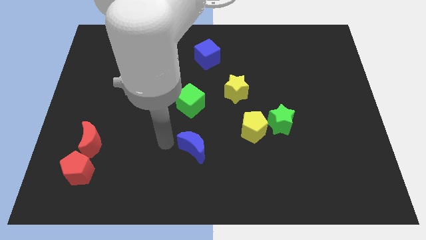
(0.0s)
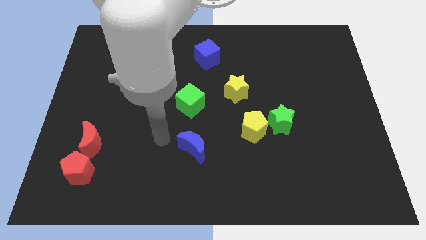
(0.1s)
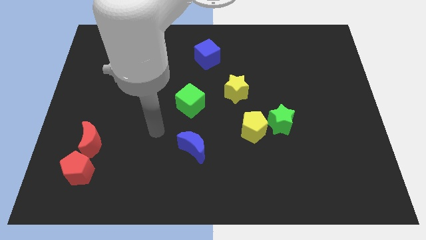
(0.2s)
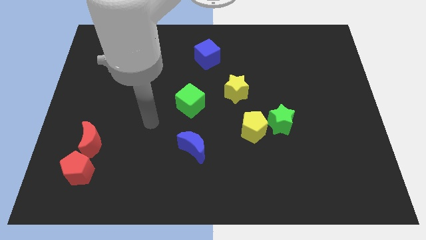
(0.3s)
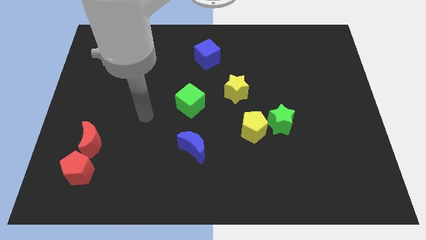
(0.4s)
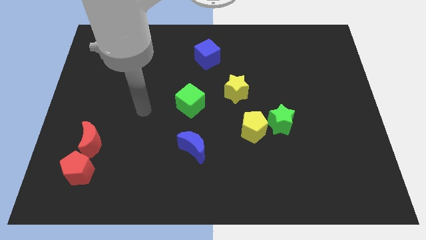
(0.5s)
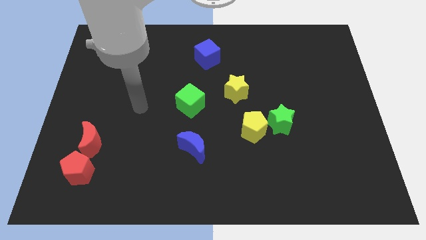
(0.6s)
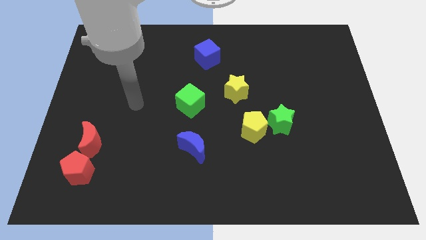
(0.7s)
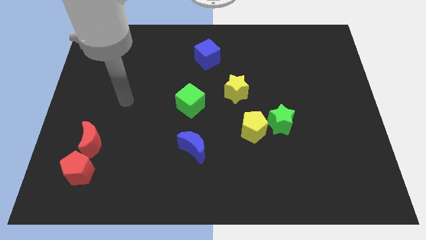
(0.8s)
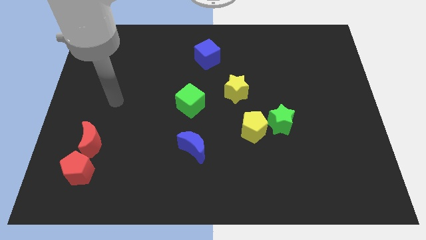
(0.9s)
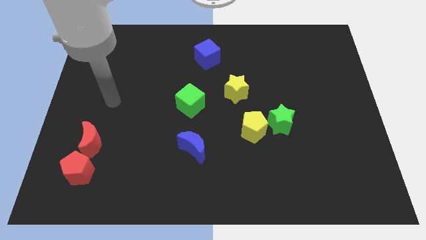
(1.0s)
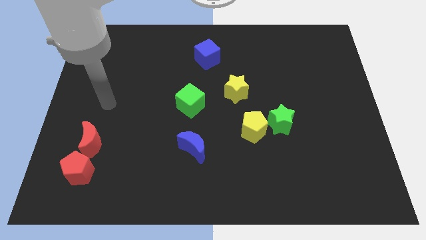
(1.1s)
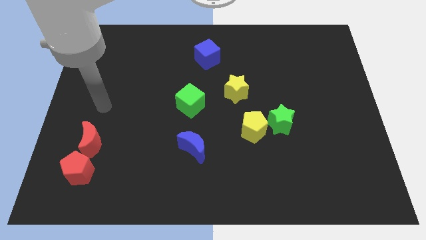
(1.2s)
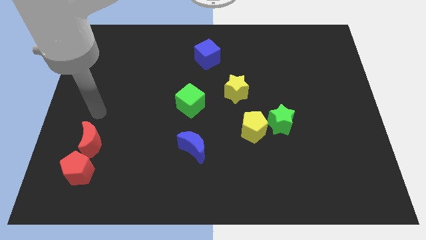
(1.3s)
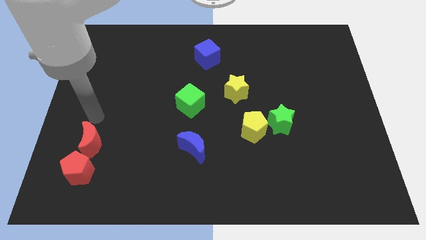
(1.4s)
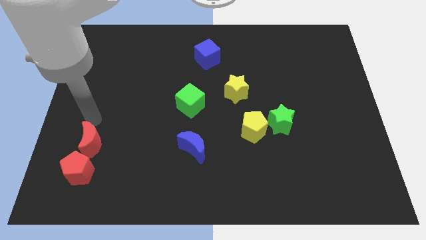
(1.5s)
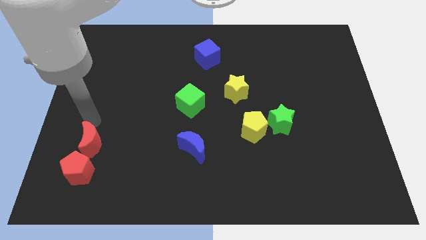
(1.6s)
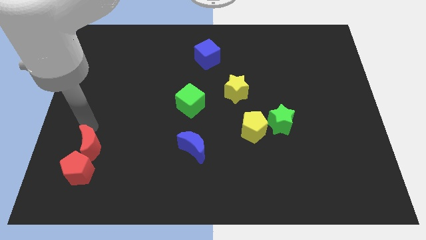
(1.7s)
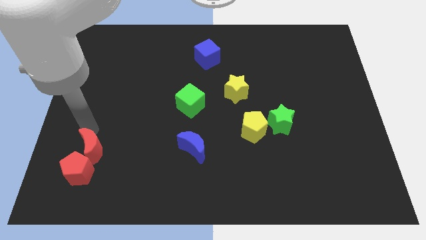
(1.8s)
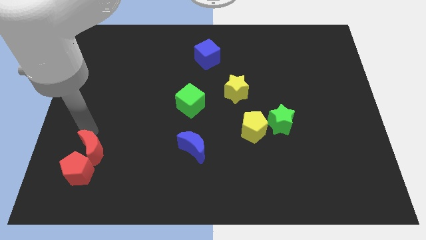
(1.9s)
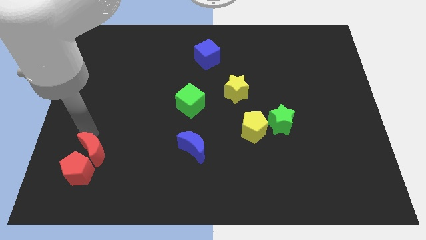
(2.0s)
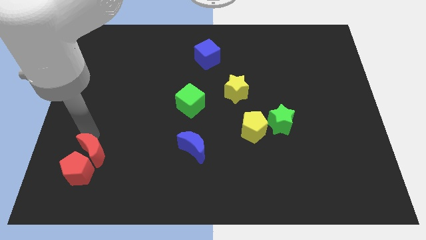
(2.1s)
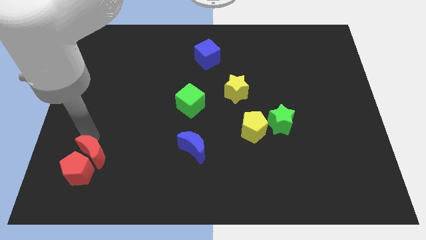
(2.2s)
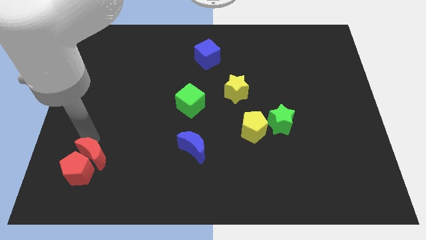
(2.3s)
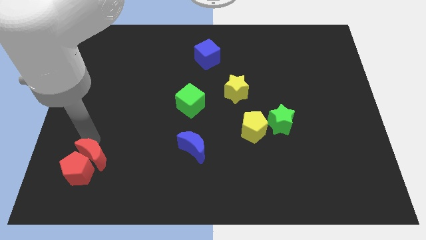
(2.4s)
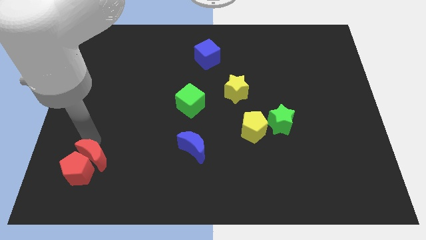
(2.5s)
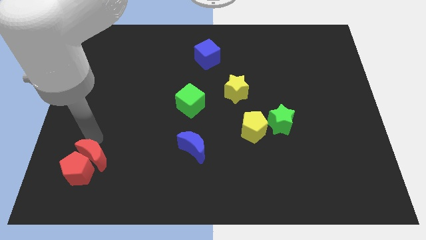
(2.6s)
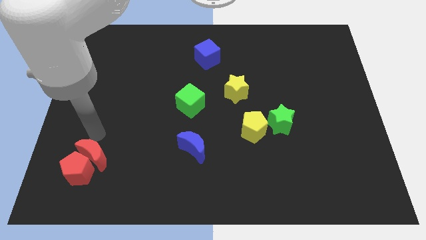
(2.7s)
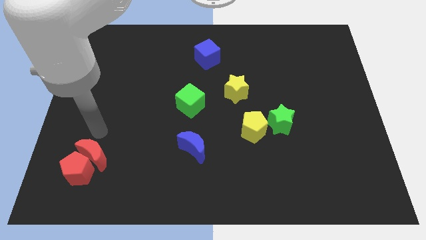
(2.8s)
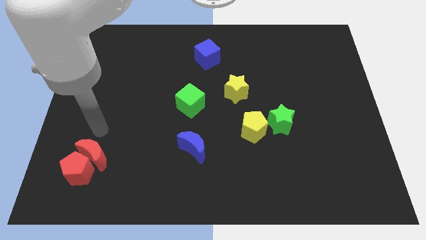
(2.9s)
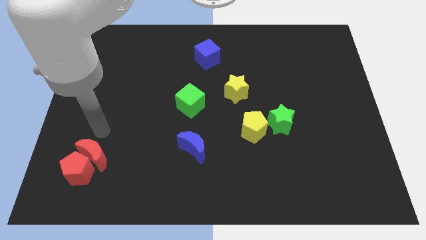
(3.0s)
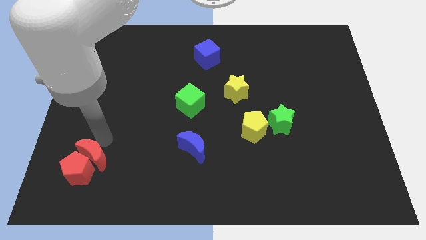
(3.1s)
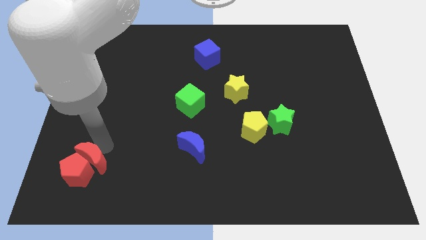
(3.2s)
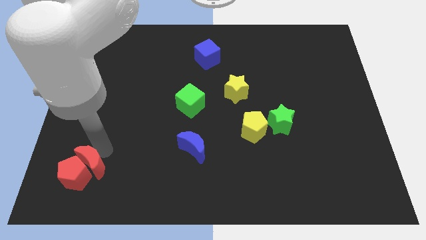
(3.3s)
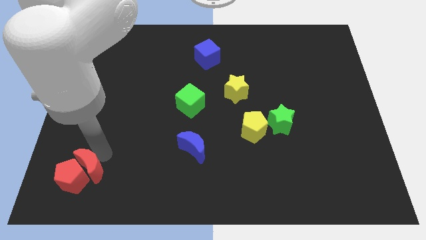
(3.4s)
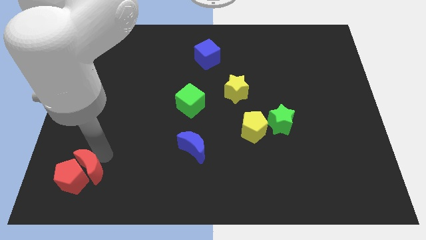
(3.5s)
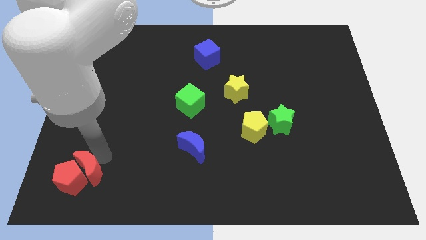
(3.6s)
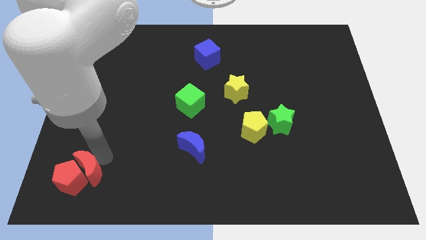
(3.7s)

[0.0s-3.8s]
slightly move the red moon into the red pentagon

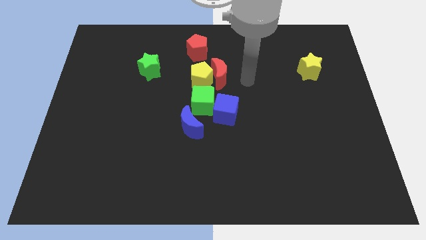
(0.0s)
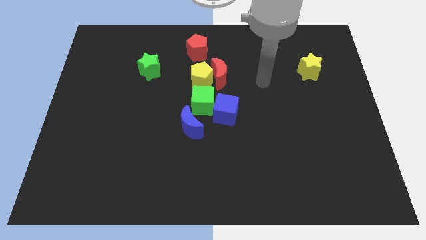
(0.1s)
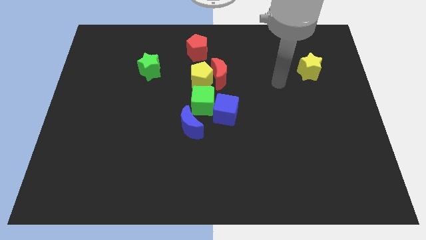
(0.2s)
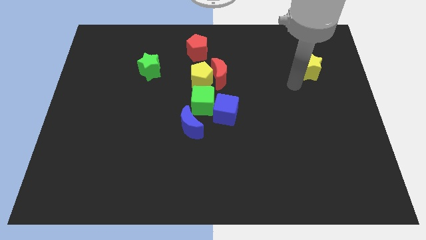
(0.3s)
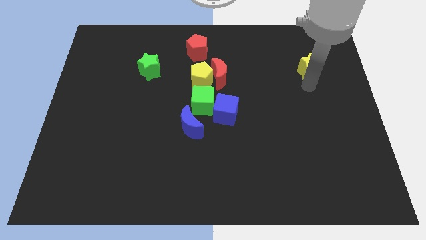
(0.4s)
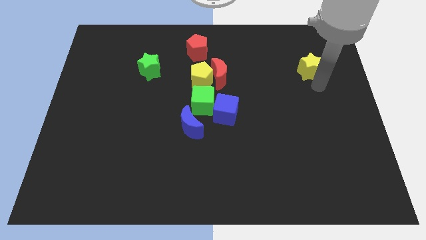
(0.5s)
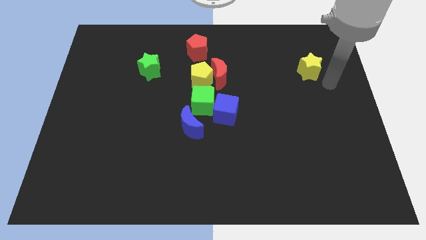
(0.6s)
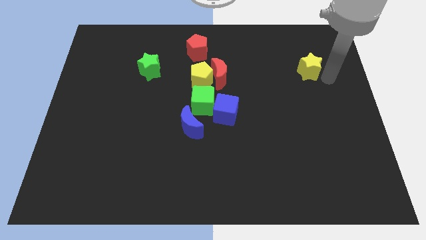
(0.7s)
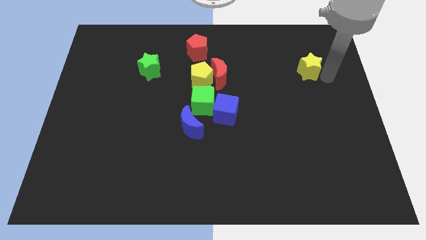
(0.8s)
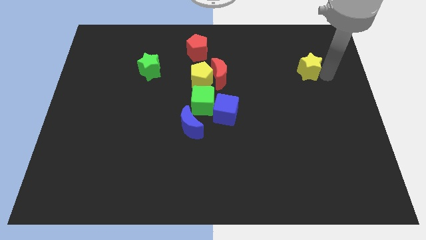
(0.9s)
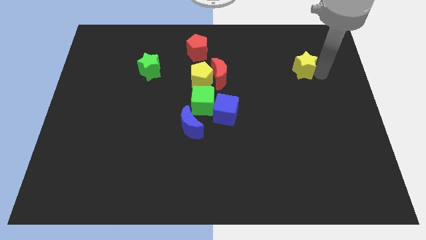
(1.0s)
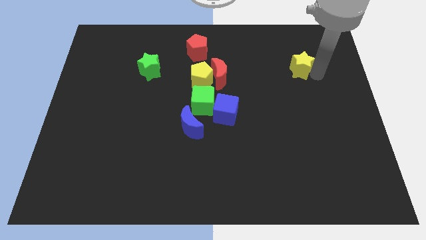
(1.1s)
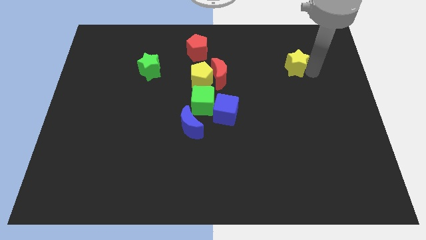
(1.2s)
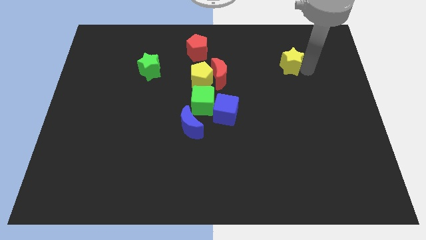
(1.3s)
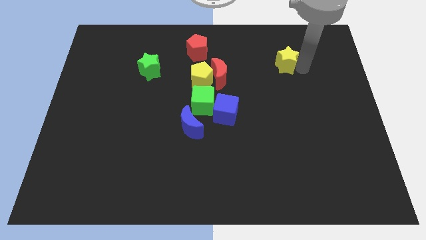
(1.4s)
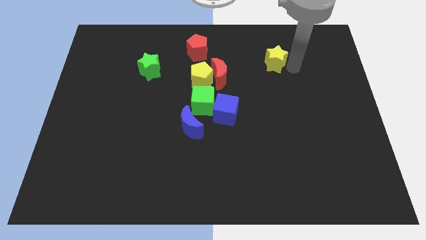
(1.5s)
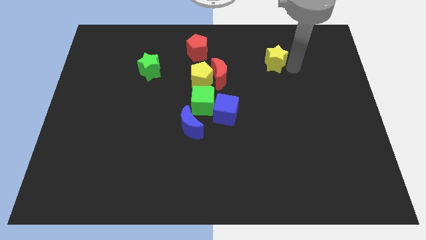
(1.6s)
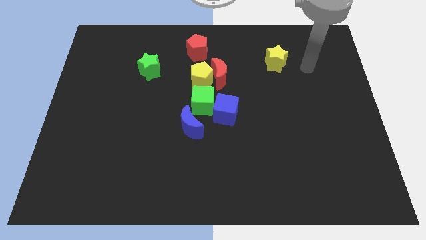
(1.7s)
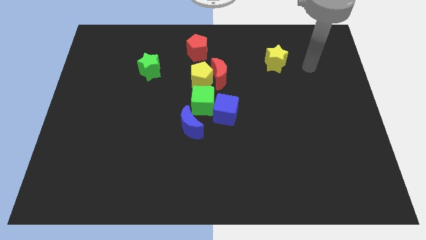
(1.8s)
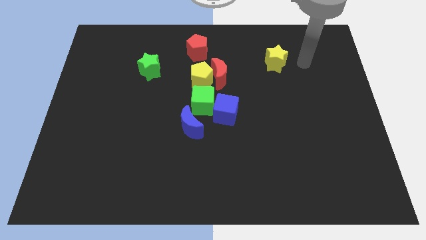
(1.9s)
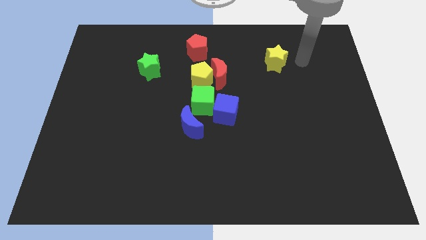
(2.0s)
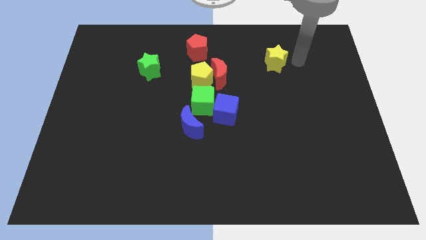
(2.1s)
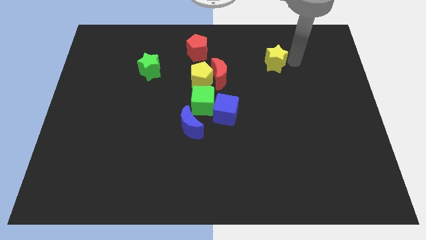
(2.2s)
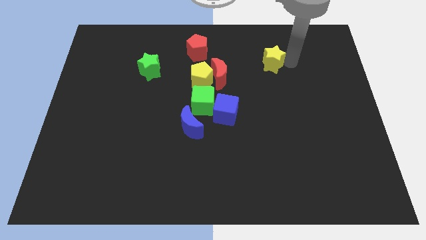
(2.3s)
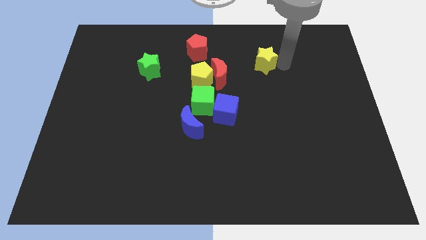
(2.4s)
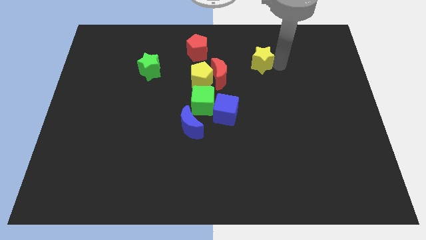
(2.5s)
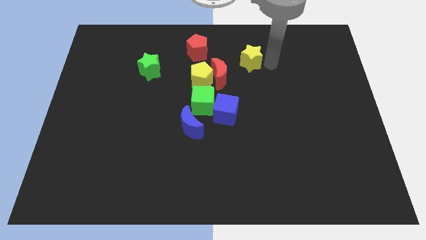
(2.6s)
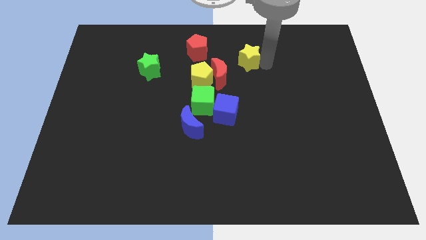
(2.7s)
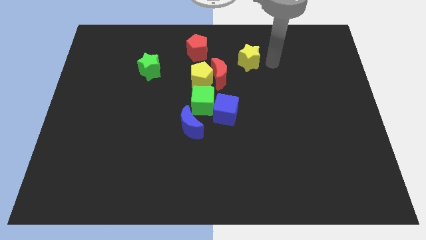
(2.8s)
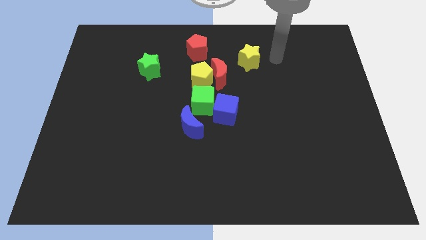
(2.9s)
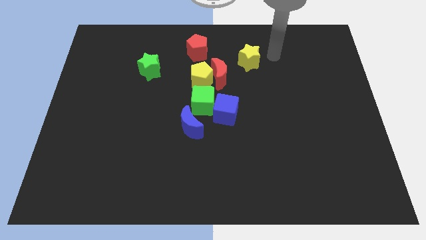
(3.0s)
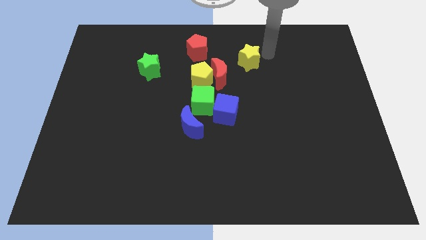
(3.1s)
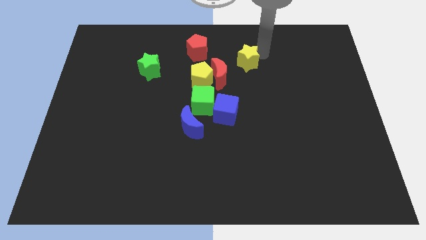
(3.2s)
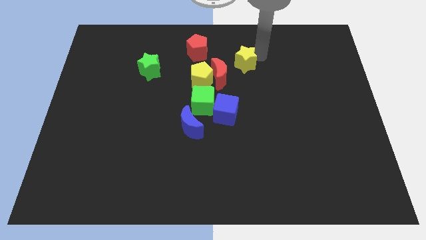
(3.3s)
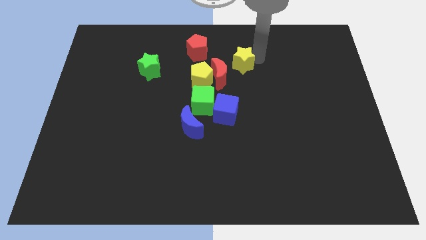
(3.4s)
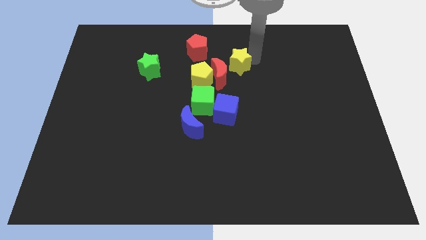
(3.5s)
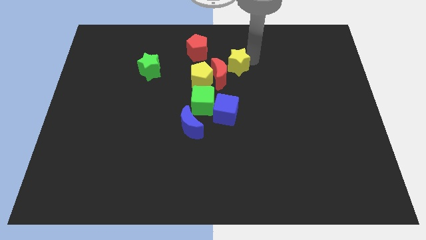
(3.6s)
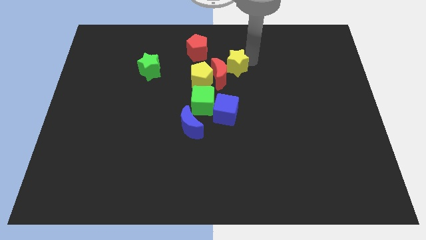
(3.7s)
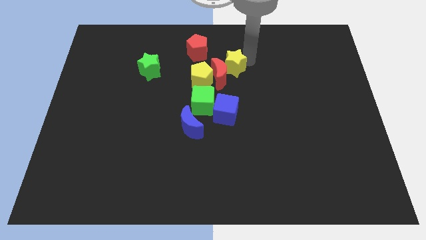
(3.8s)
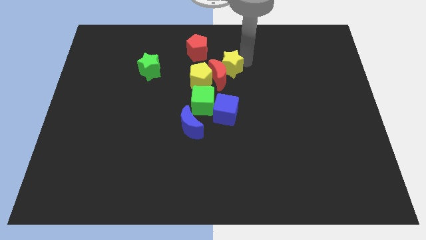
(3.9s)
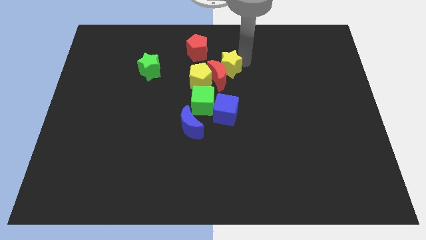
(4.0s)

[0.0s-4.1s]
move the yellow star into the red crescent

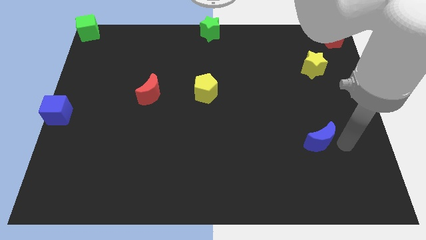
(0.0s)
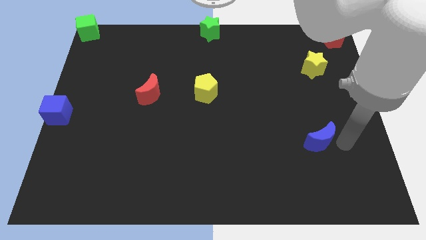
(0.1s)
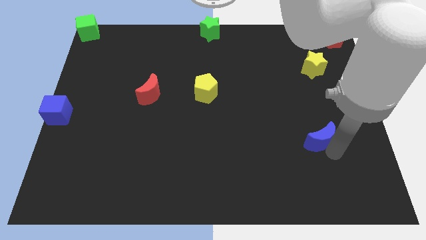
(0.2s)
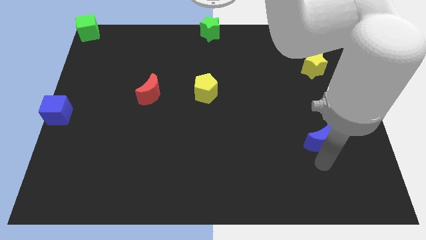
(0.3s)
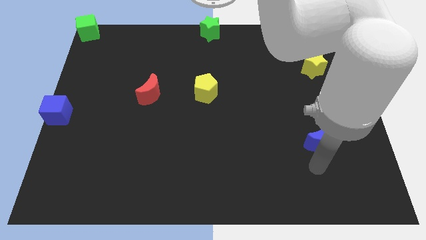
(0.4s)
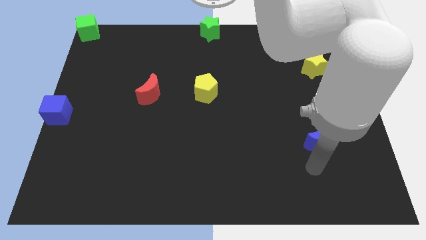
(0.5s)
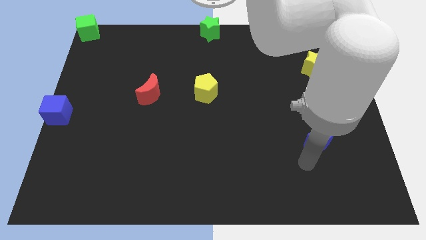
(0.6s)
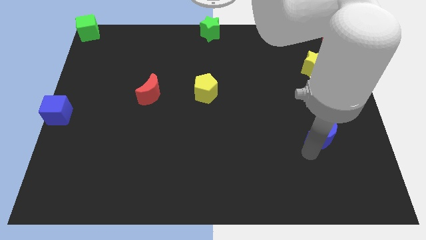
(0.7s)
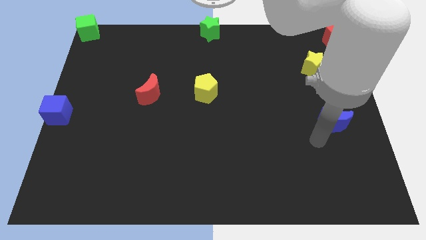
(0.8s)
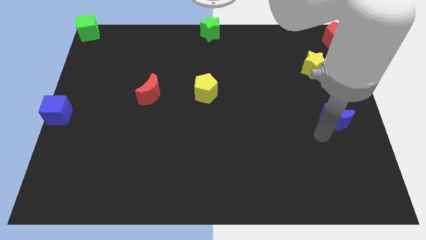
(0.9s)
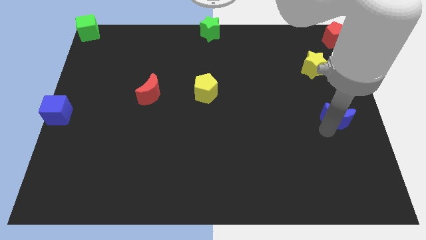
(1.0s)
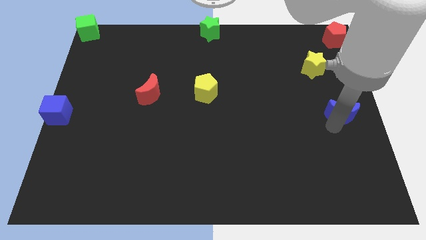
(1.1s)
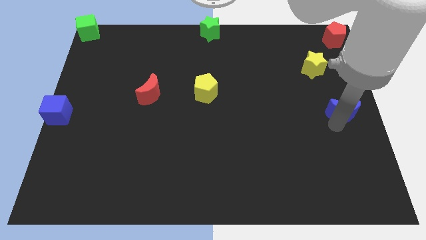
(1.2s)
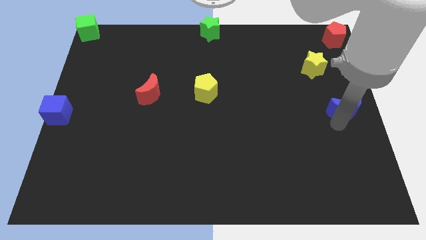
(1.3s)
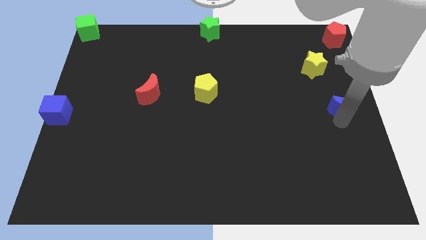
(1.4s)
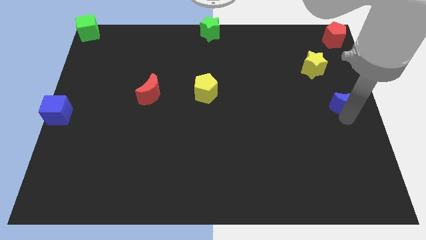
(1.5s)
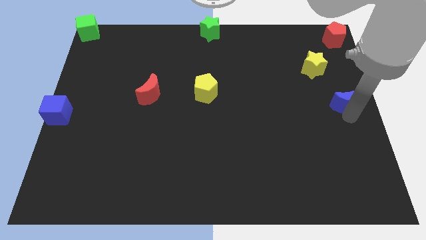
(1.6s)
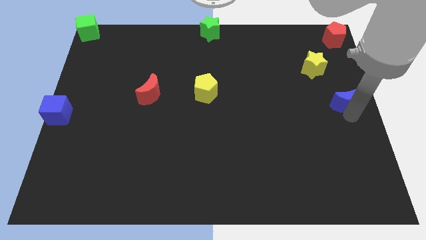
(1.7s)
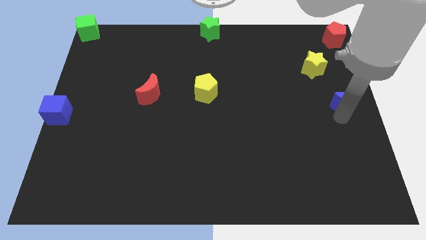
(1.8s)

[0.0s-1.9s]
place blue crescent below red pentagon
